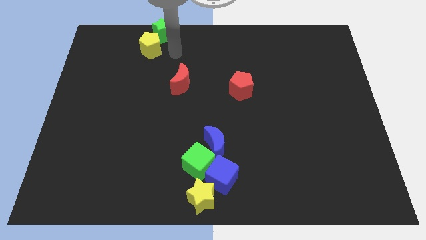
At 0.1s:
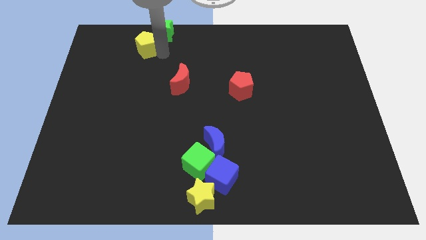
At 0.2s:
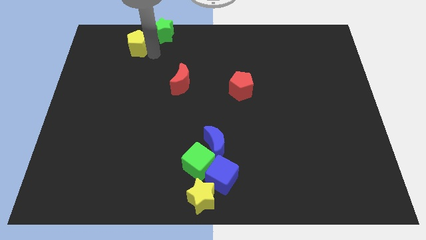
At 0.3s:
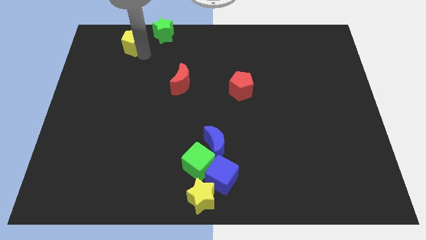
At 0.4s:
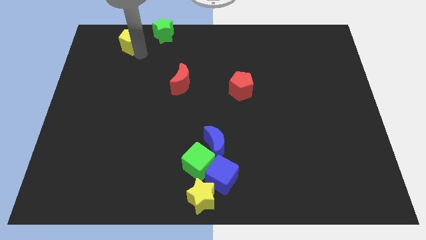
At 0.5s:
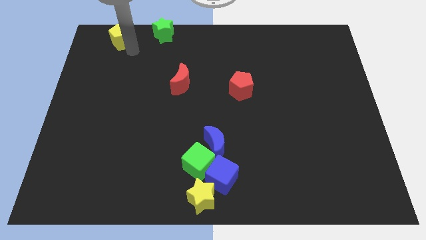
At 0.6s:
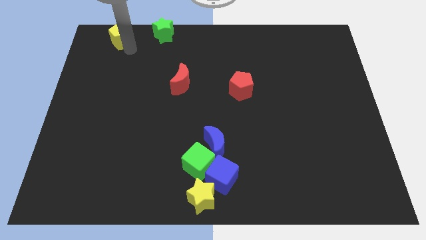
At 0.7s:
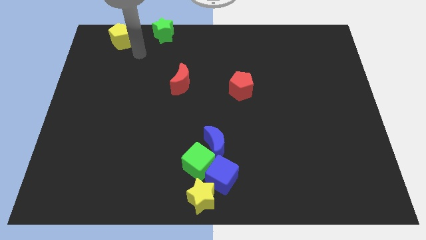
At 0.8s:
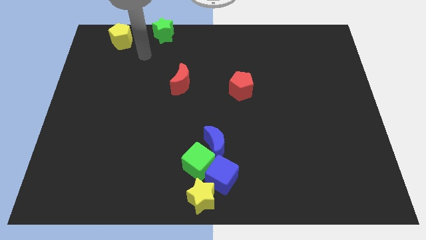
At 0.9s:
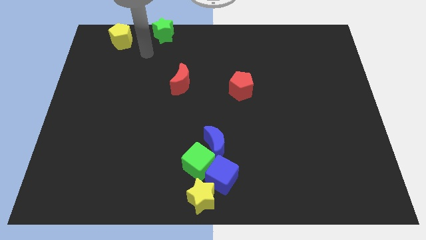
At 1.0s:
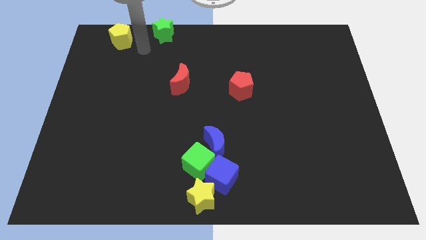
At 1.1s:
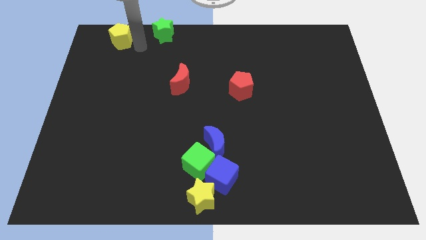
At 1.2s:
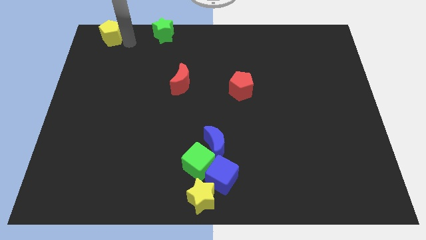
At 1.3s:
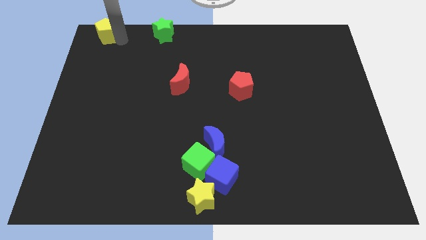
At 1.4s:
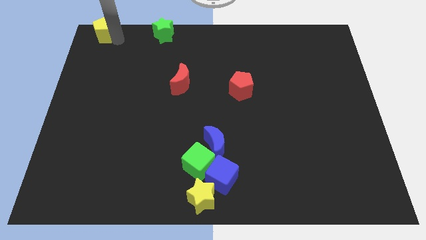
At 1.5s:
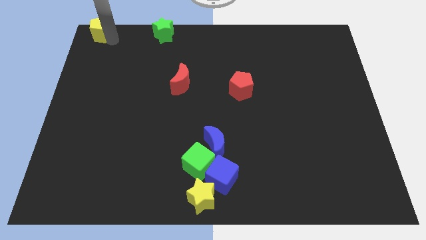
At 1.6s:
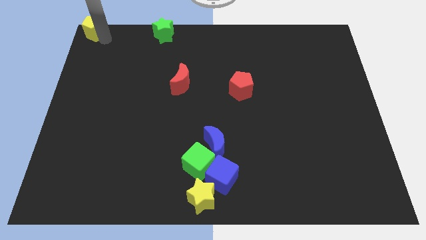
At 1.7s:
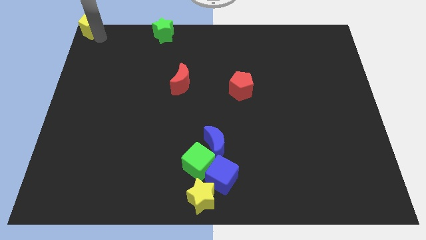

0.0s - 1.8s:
push the yellow pentagon to the top left corner

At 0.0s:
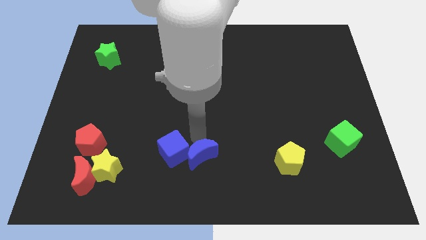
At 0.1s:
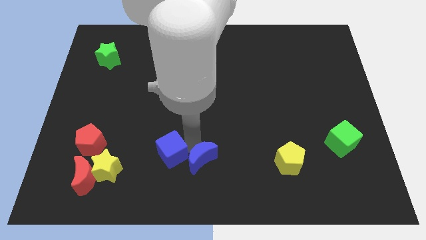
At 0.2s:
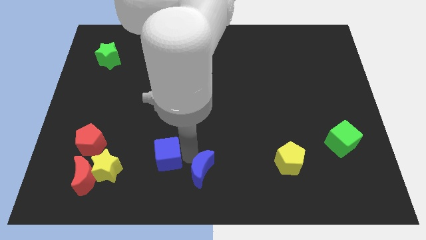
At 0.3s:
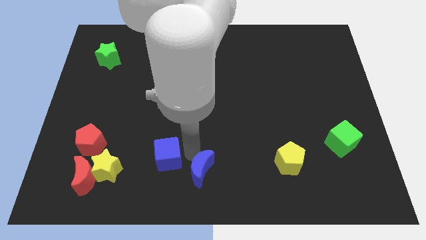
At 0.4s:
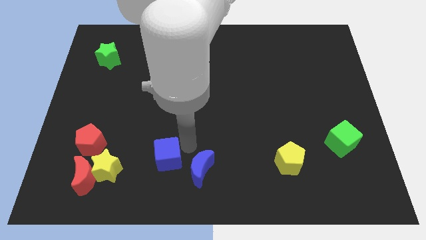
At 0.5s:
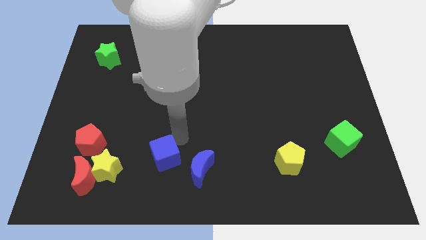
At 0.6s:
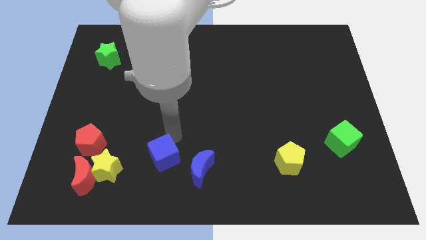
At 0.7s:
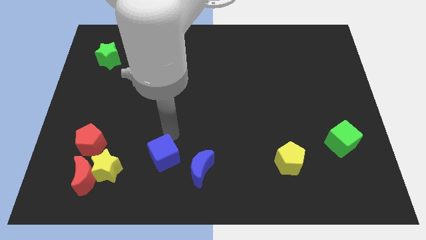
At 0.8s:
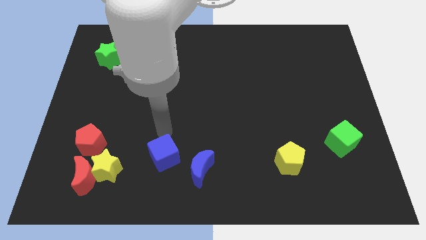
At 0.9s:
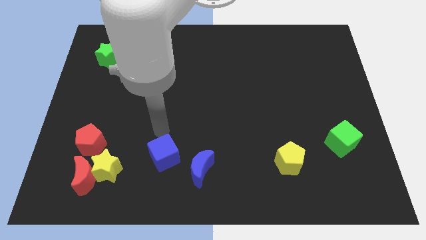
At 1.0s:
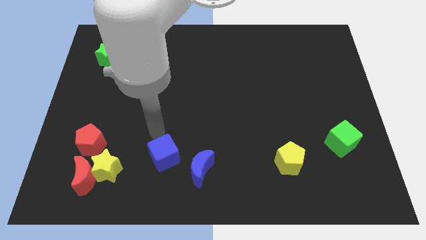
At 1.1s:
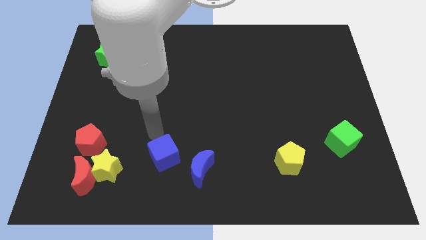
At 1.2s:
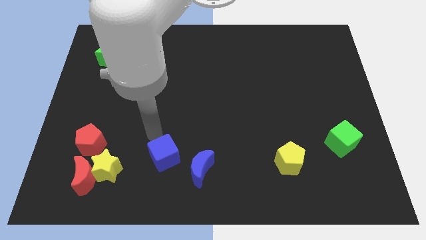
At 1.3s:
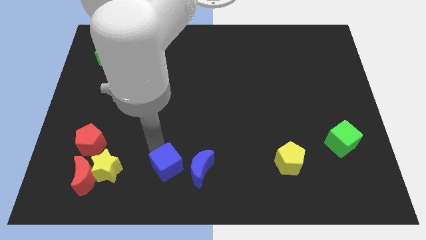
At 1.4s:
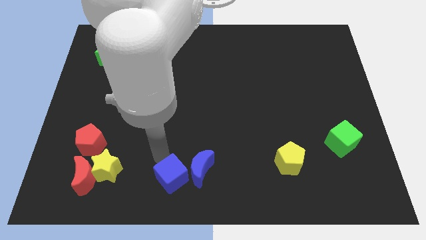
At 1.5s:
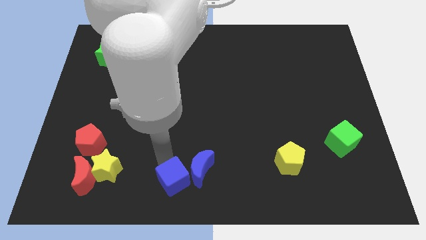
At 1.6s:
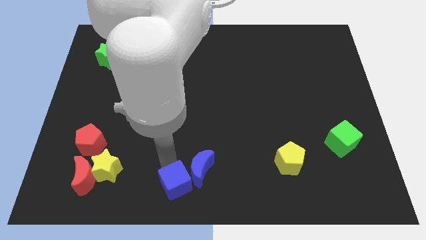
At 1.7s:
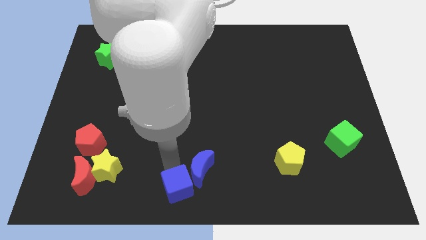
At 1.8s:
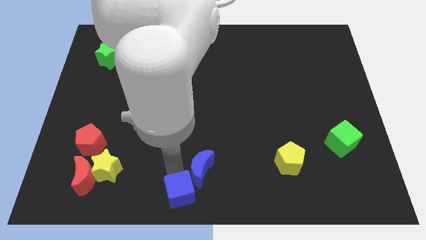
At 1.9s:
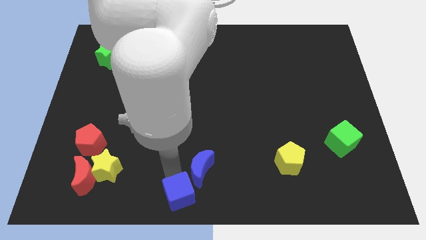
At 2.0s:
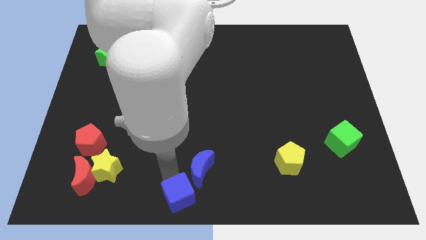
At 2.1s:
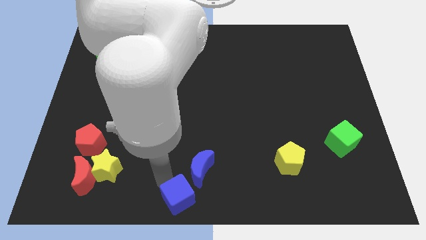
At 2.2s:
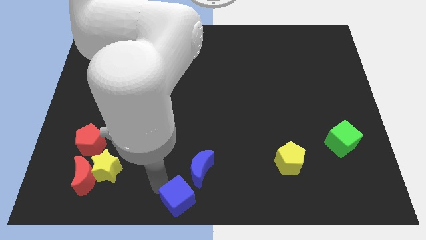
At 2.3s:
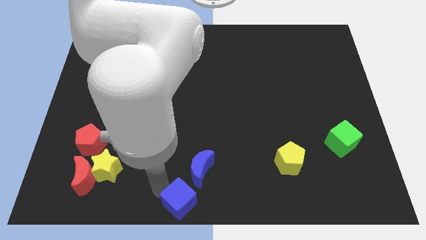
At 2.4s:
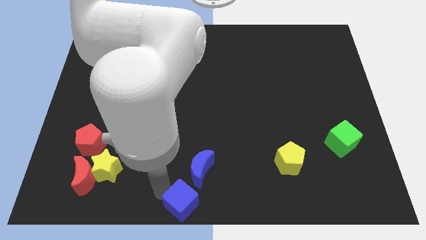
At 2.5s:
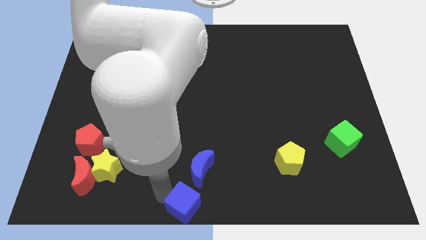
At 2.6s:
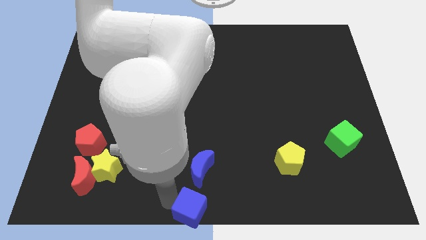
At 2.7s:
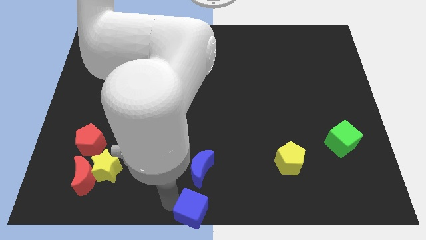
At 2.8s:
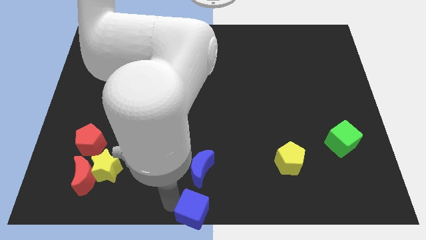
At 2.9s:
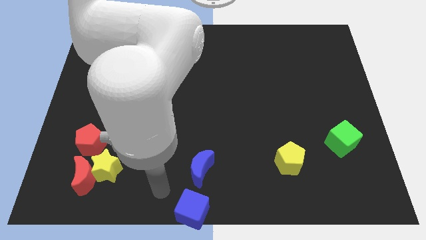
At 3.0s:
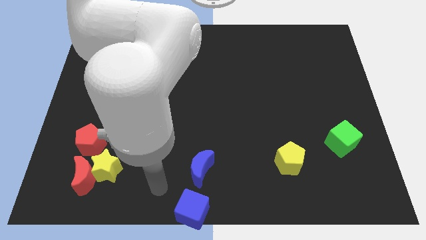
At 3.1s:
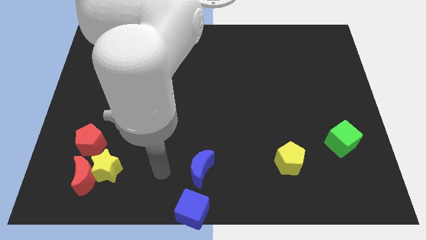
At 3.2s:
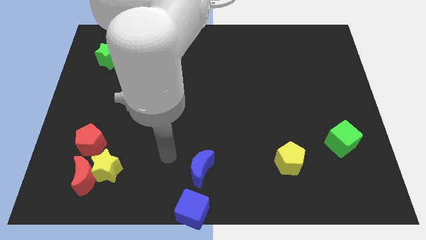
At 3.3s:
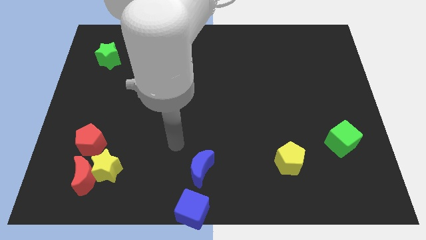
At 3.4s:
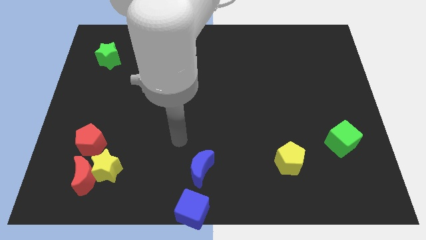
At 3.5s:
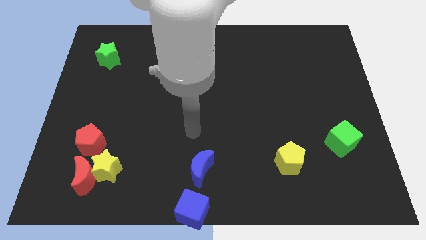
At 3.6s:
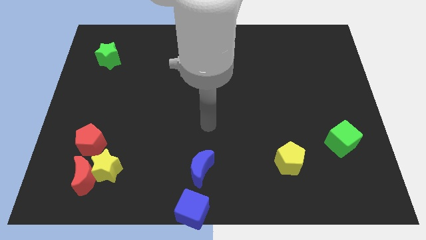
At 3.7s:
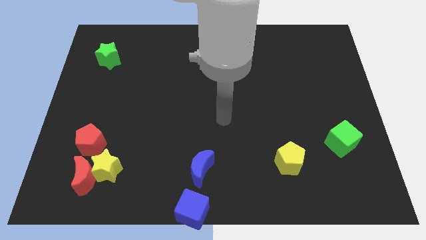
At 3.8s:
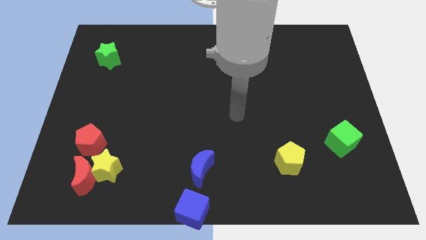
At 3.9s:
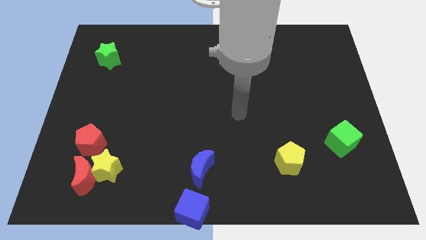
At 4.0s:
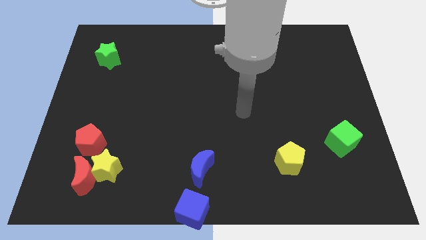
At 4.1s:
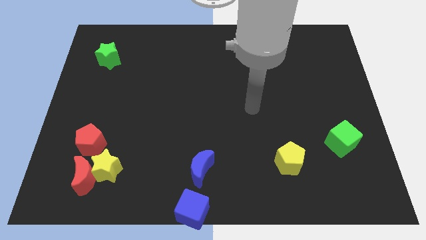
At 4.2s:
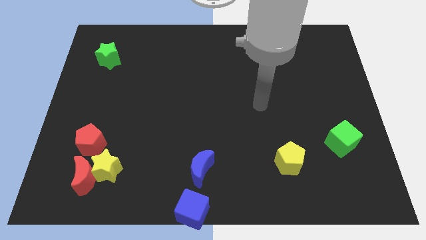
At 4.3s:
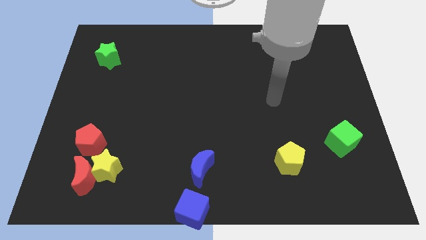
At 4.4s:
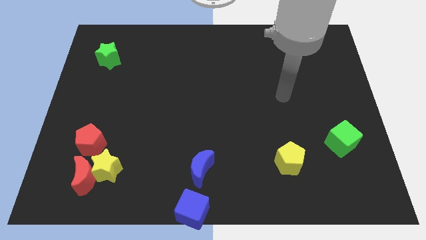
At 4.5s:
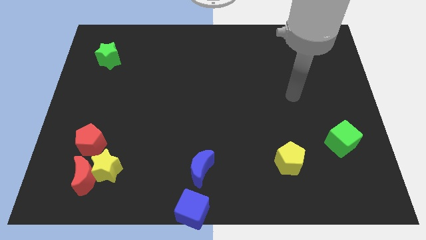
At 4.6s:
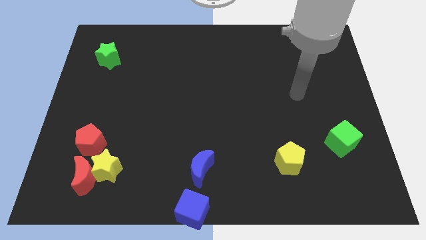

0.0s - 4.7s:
push the blue cube to the bottom center of the board

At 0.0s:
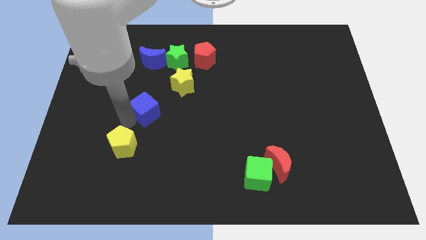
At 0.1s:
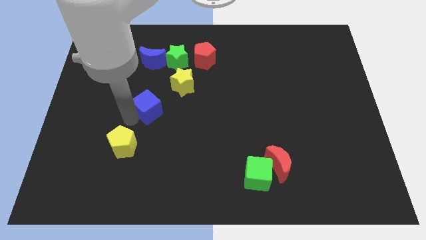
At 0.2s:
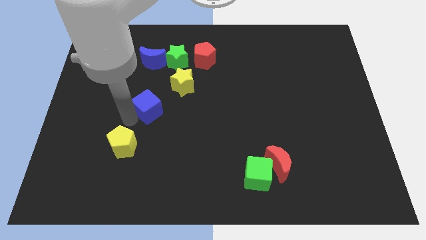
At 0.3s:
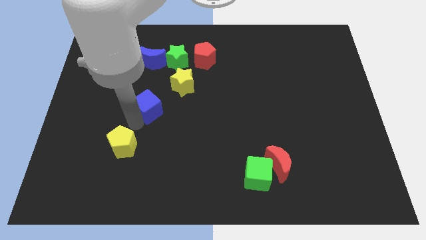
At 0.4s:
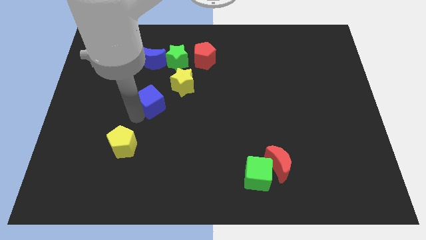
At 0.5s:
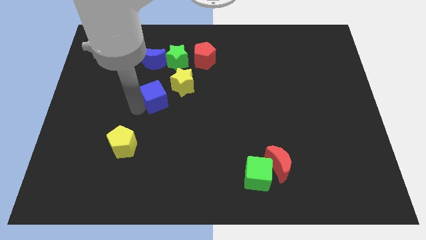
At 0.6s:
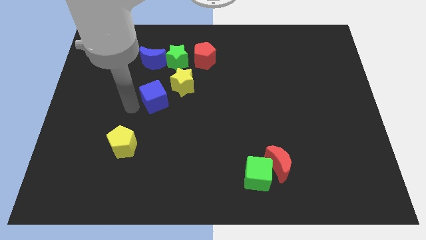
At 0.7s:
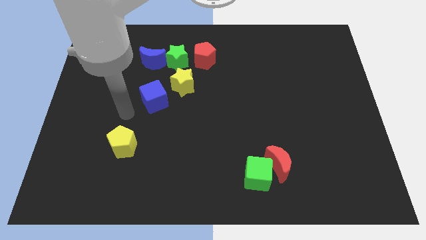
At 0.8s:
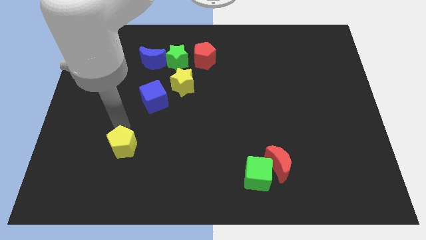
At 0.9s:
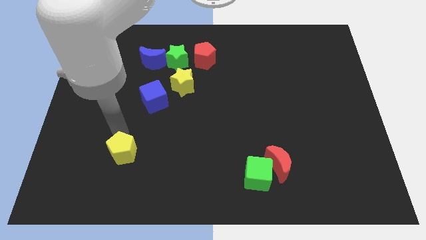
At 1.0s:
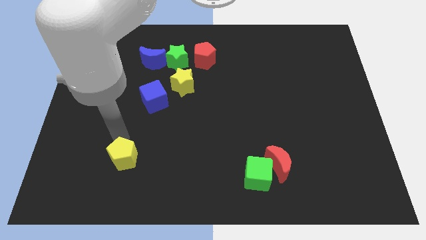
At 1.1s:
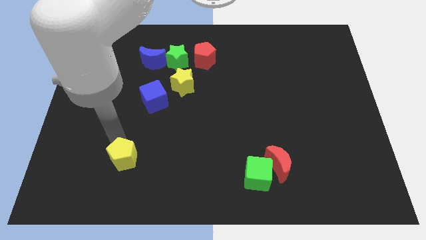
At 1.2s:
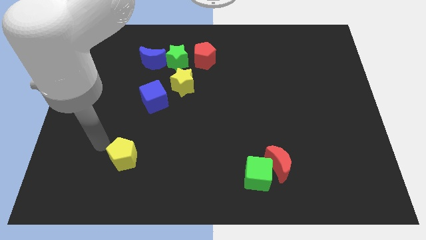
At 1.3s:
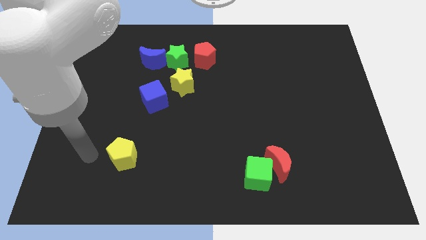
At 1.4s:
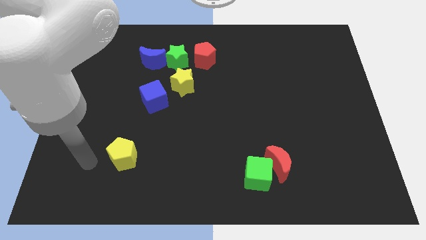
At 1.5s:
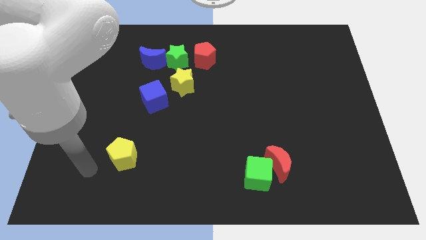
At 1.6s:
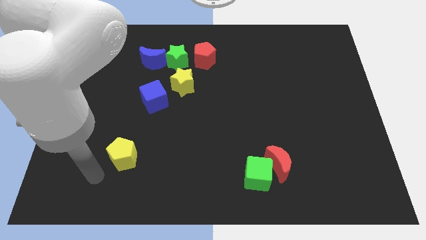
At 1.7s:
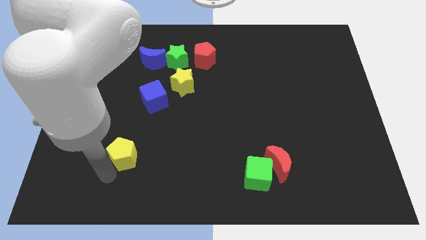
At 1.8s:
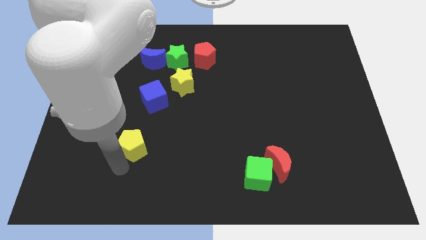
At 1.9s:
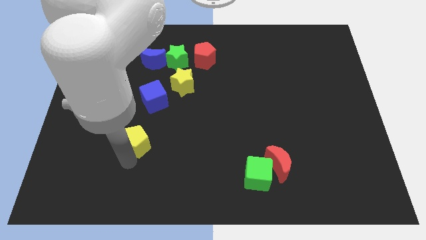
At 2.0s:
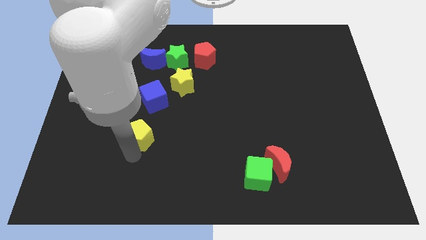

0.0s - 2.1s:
move the yellow pentagon upwards to the bottom of the blue cube

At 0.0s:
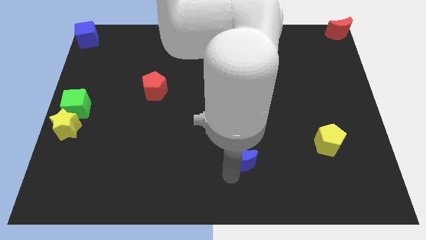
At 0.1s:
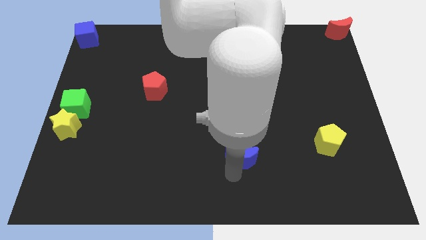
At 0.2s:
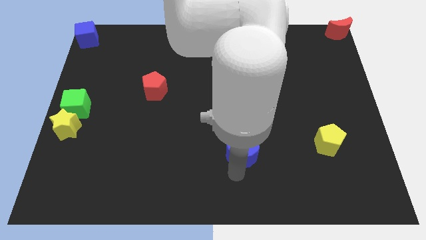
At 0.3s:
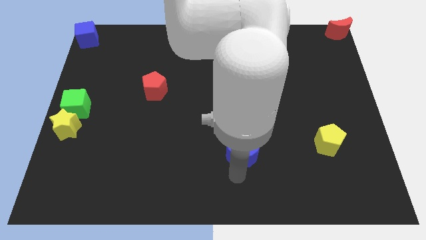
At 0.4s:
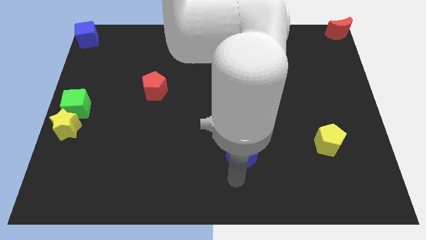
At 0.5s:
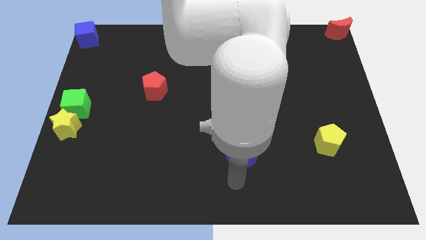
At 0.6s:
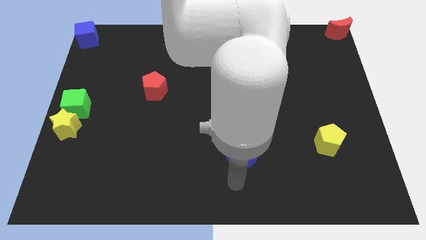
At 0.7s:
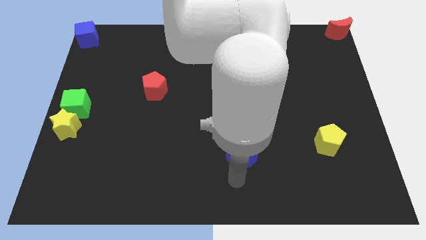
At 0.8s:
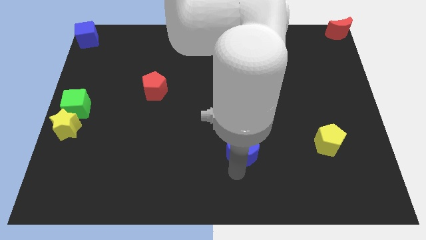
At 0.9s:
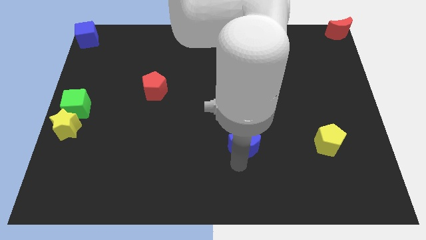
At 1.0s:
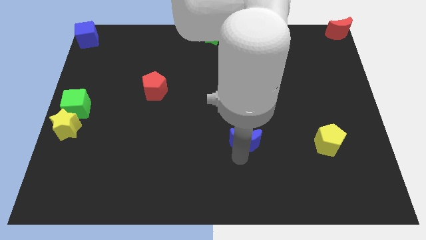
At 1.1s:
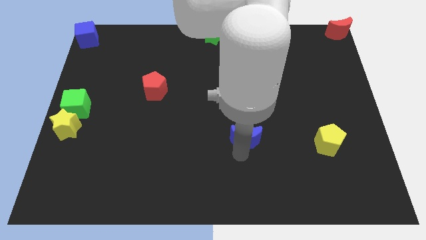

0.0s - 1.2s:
place the blue moon to the left of the yellow pentagon
